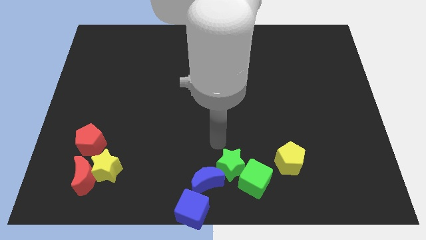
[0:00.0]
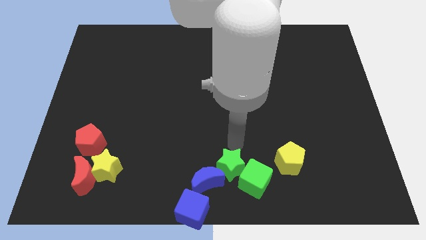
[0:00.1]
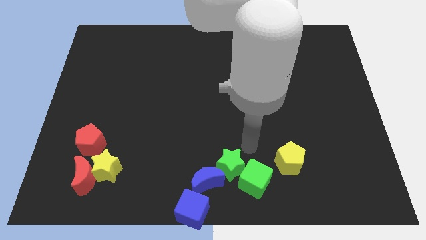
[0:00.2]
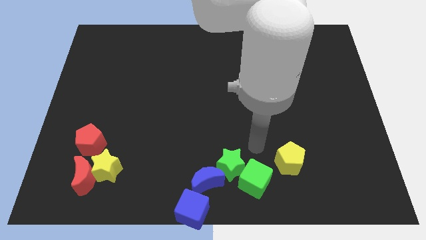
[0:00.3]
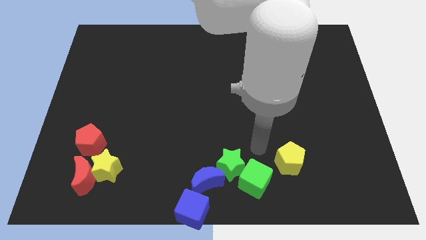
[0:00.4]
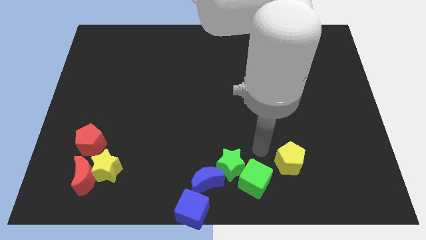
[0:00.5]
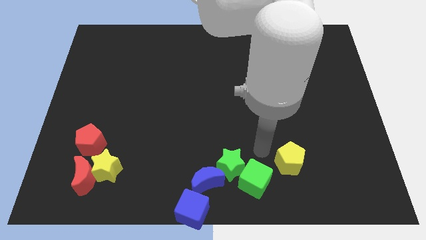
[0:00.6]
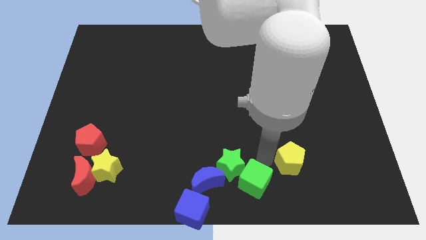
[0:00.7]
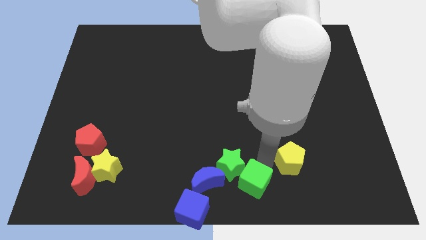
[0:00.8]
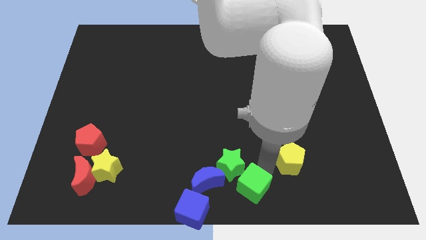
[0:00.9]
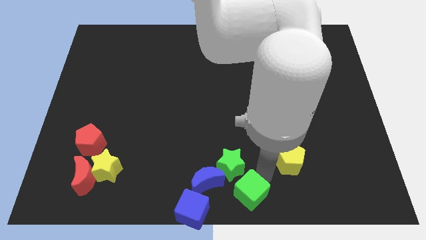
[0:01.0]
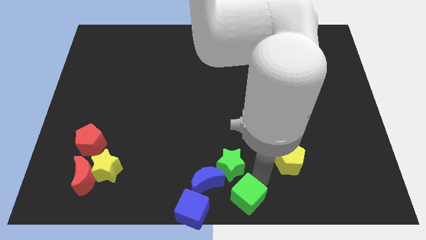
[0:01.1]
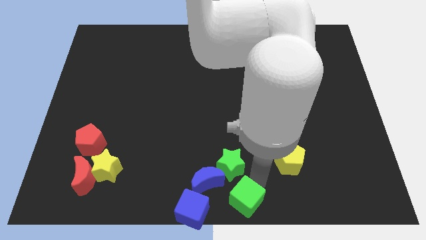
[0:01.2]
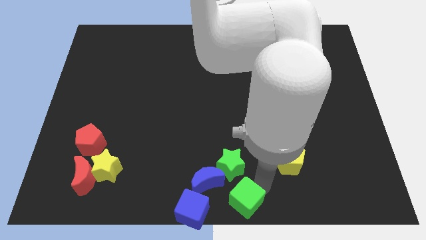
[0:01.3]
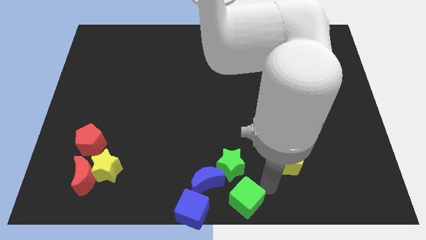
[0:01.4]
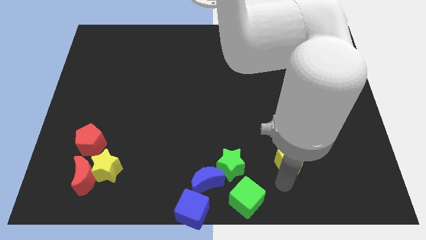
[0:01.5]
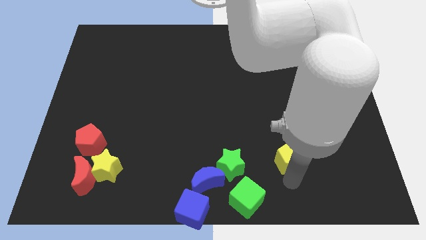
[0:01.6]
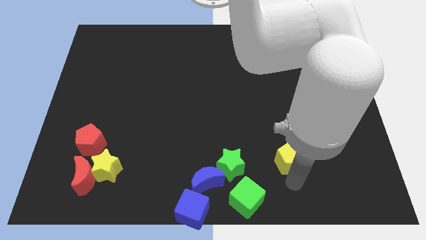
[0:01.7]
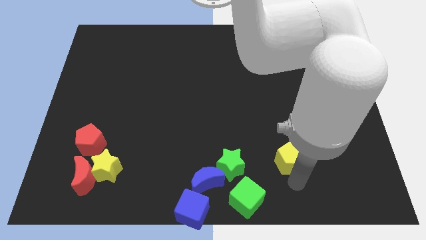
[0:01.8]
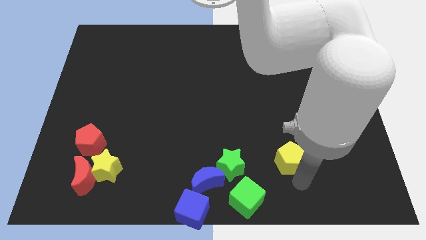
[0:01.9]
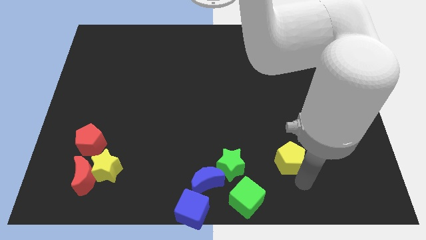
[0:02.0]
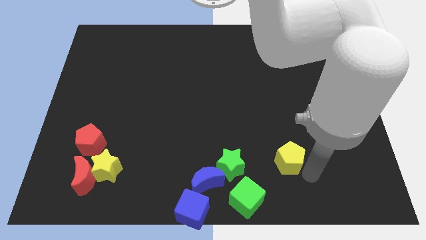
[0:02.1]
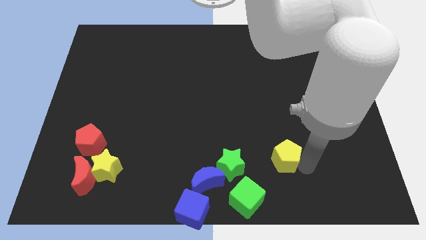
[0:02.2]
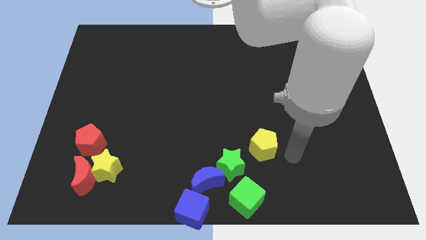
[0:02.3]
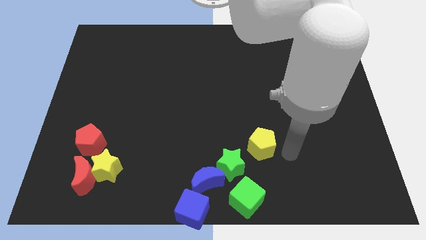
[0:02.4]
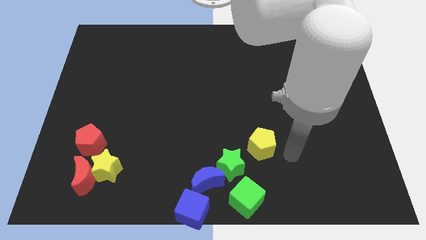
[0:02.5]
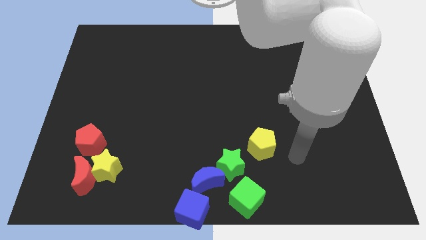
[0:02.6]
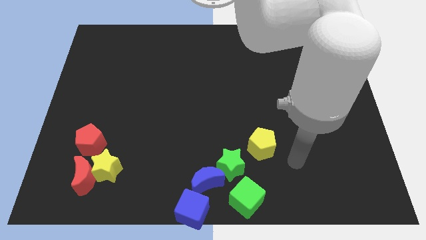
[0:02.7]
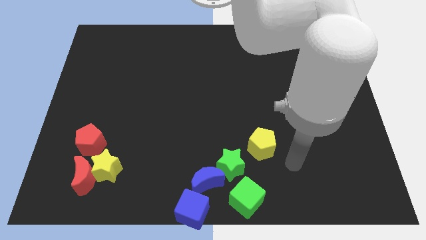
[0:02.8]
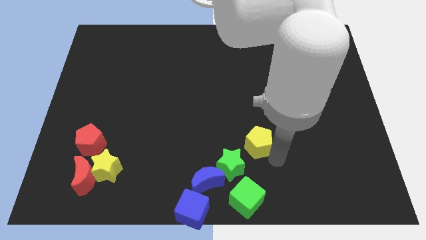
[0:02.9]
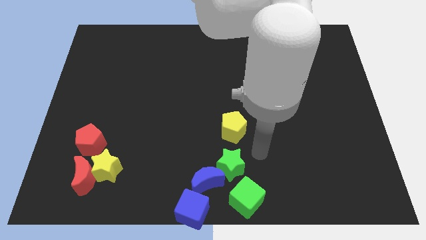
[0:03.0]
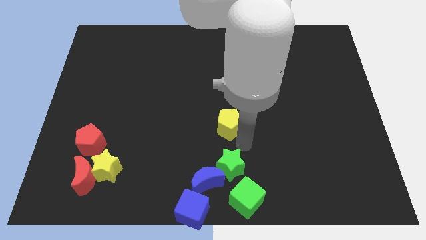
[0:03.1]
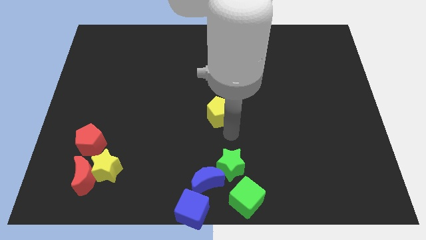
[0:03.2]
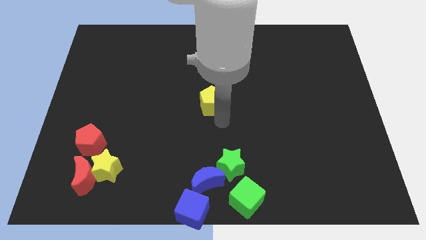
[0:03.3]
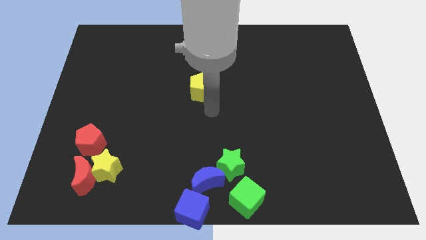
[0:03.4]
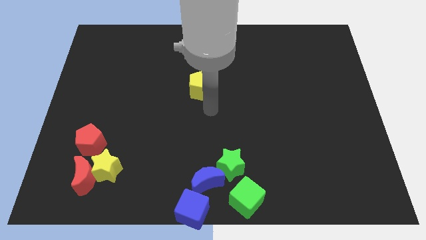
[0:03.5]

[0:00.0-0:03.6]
move the yellow pentagon to the center of the board

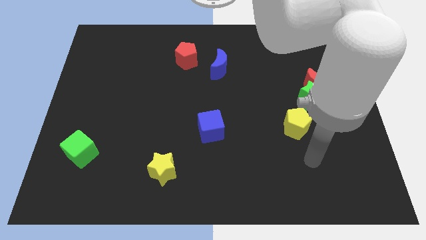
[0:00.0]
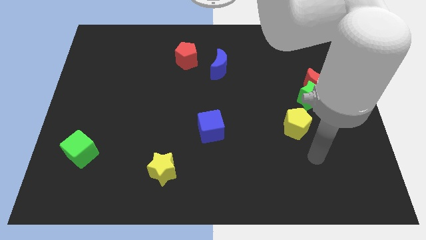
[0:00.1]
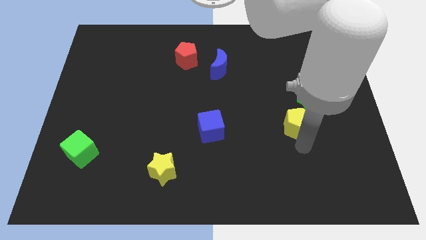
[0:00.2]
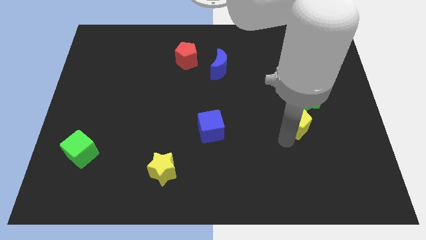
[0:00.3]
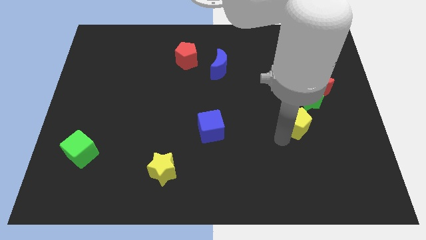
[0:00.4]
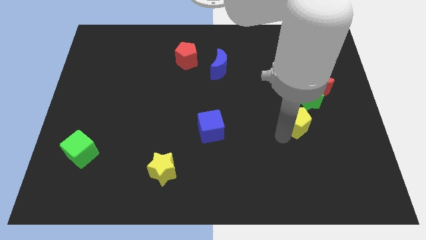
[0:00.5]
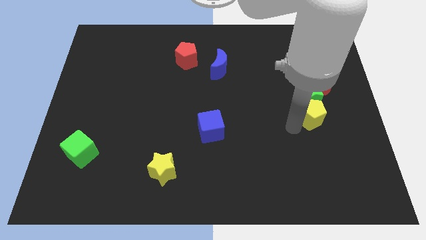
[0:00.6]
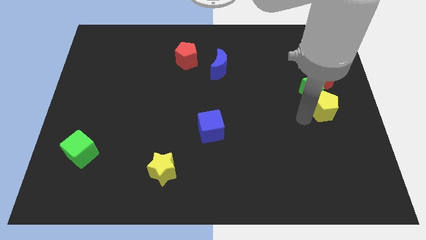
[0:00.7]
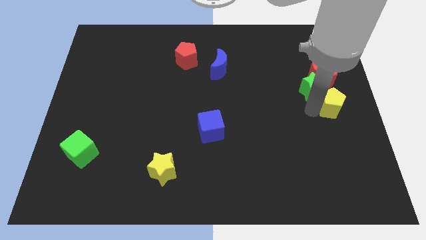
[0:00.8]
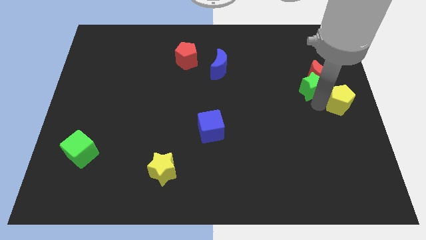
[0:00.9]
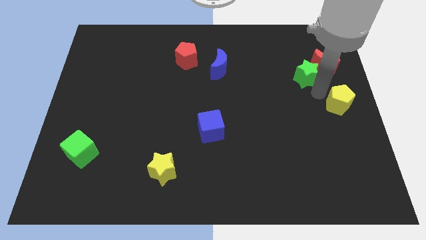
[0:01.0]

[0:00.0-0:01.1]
move your hand in between green star and yellow pentagon

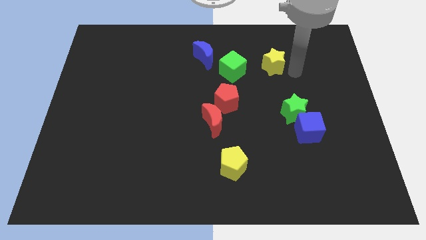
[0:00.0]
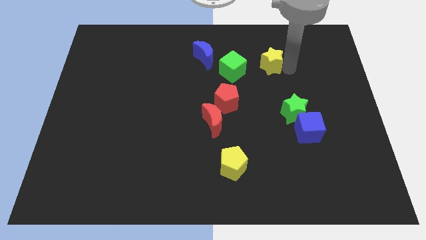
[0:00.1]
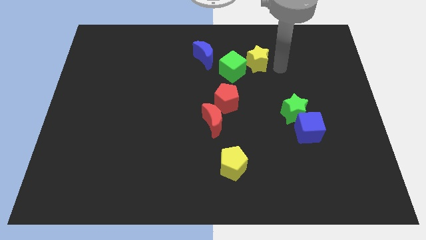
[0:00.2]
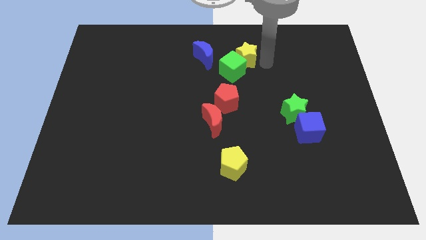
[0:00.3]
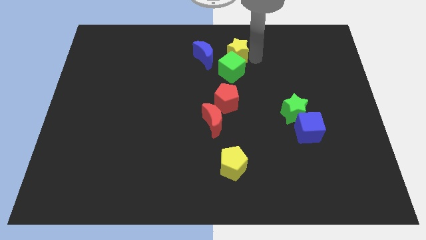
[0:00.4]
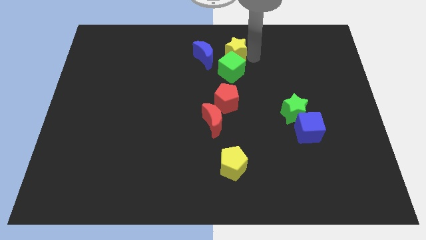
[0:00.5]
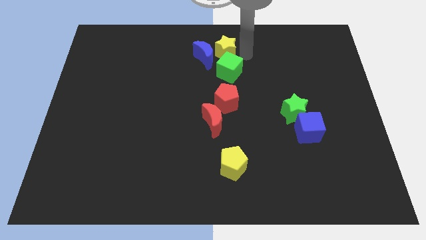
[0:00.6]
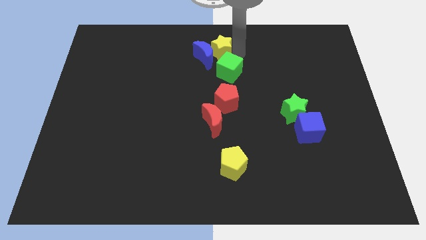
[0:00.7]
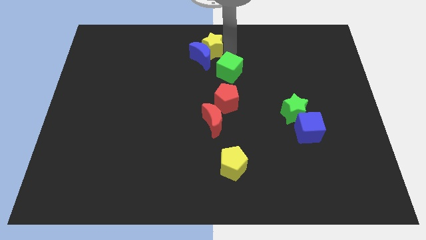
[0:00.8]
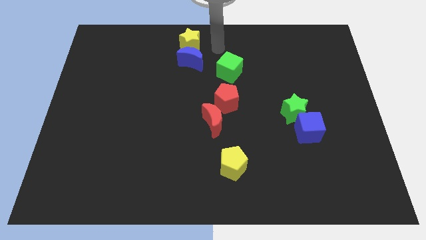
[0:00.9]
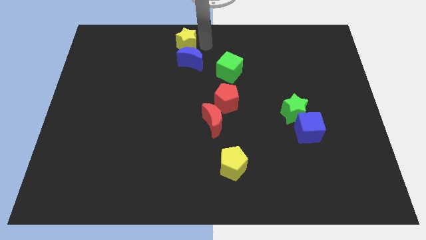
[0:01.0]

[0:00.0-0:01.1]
place the yellow star above the blue moon

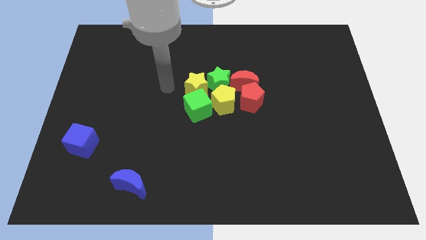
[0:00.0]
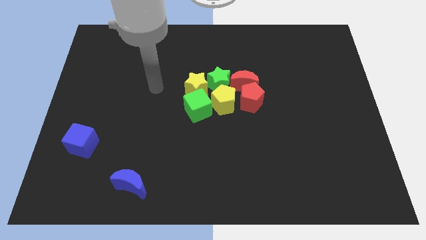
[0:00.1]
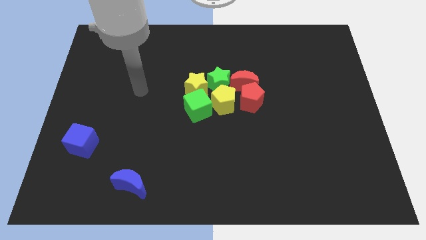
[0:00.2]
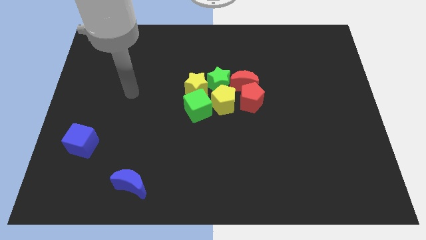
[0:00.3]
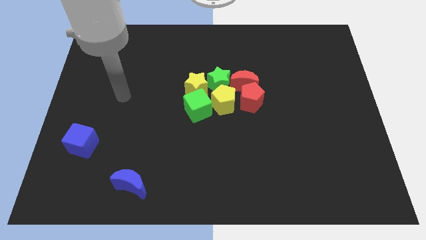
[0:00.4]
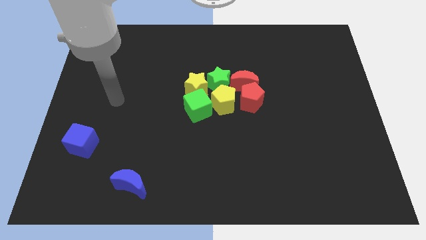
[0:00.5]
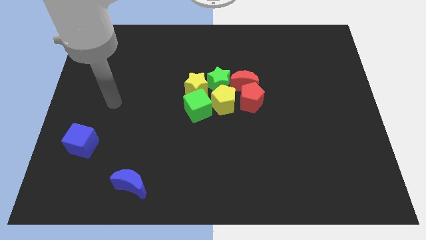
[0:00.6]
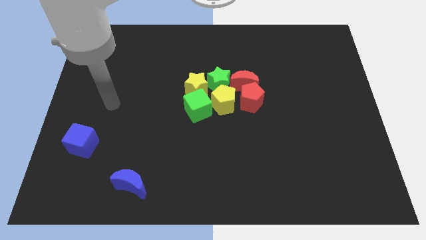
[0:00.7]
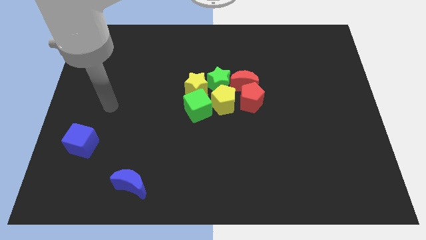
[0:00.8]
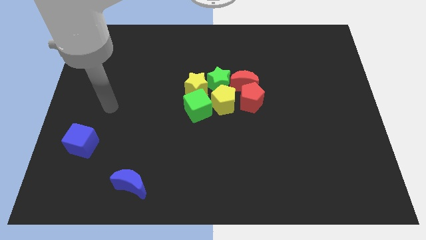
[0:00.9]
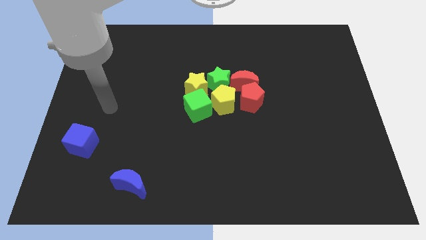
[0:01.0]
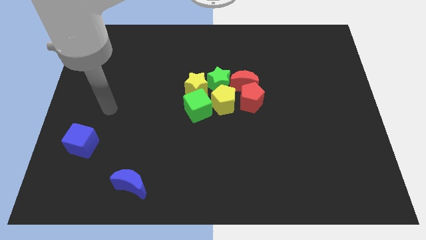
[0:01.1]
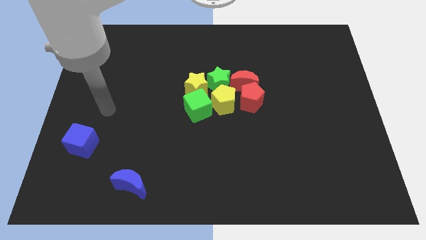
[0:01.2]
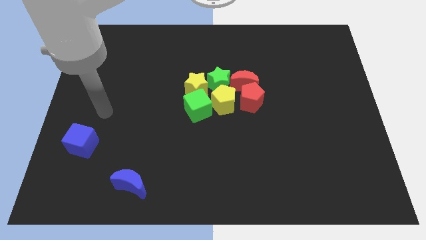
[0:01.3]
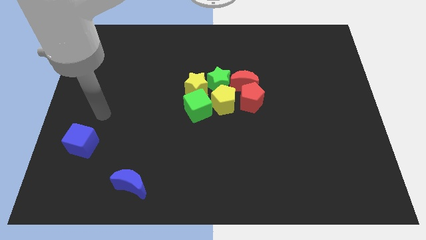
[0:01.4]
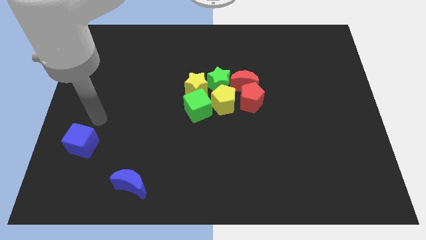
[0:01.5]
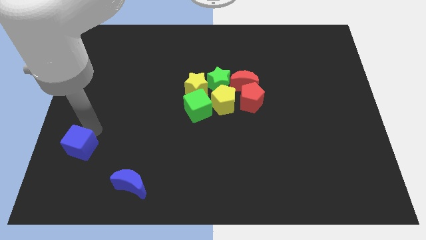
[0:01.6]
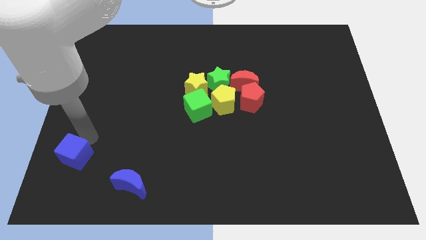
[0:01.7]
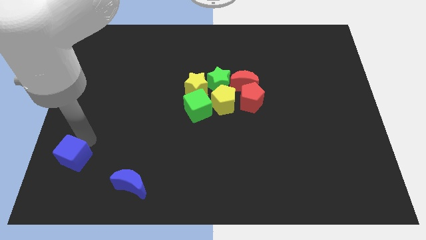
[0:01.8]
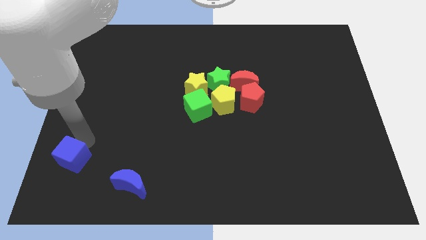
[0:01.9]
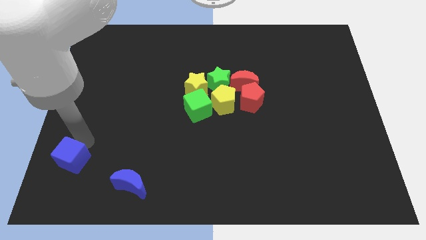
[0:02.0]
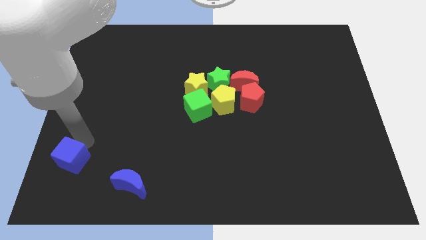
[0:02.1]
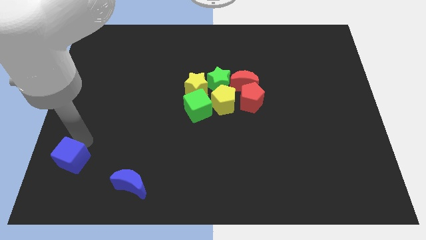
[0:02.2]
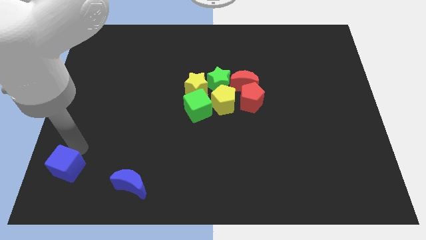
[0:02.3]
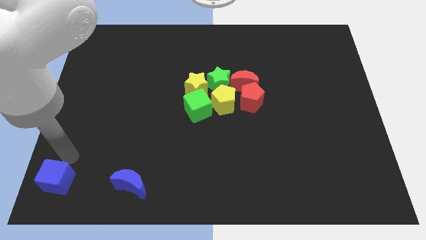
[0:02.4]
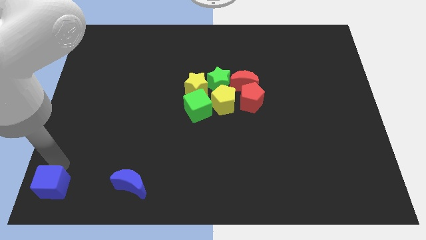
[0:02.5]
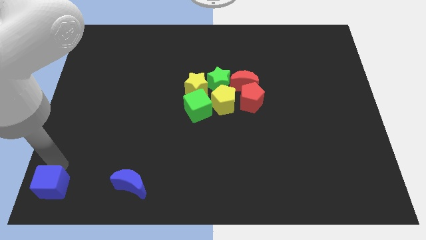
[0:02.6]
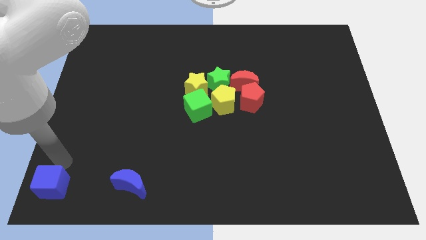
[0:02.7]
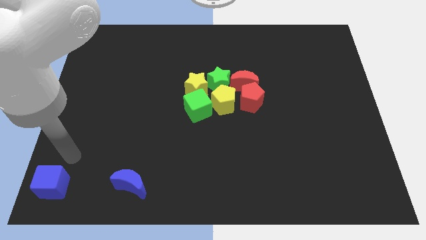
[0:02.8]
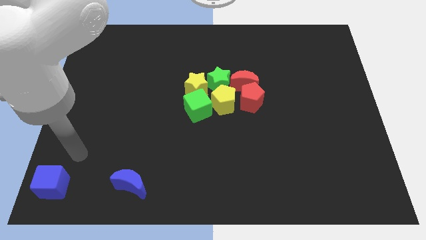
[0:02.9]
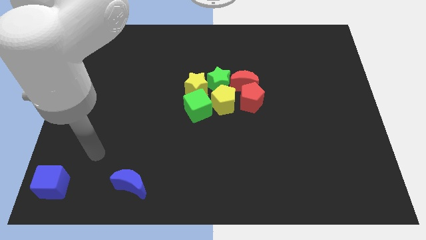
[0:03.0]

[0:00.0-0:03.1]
slide the blue cube towards the bottom left
